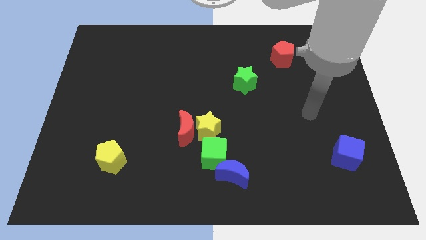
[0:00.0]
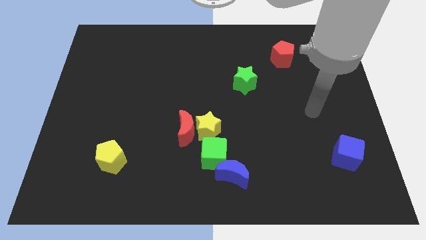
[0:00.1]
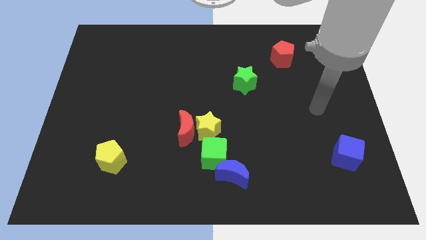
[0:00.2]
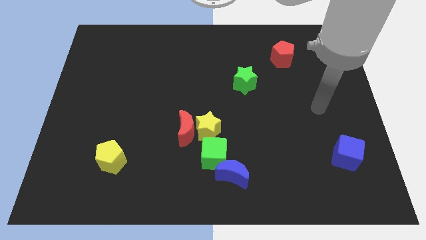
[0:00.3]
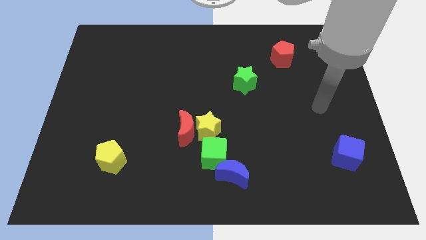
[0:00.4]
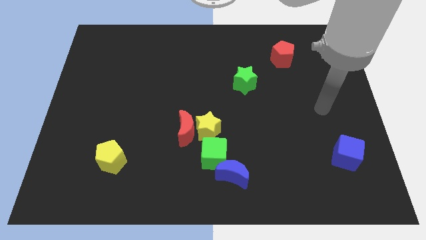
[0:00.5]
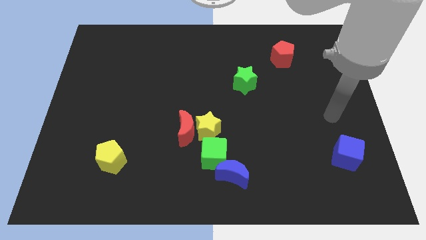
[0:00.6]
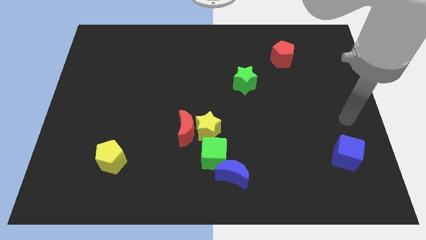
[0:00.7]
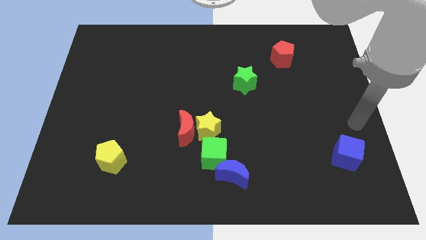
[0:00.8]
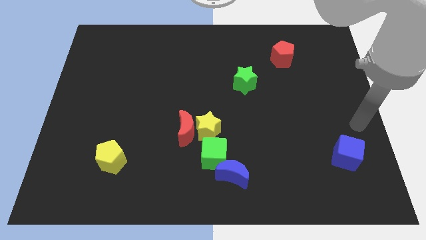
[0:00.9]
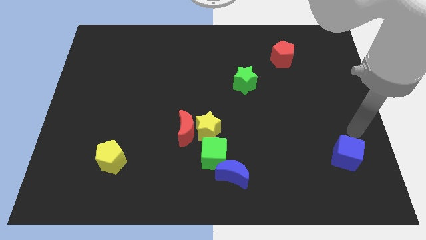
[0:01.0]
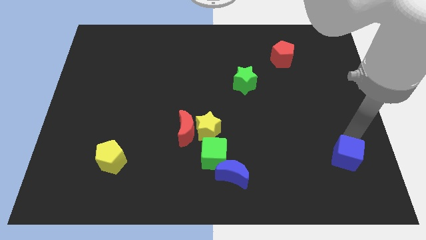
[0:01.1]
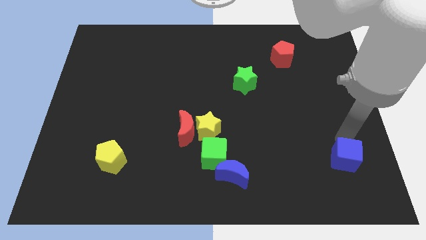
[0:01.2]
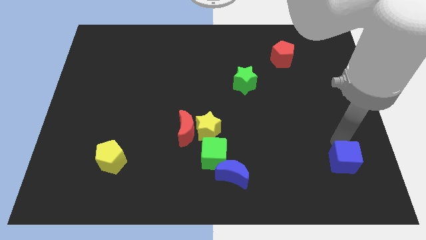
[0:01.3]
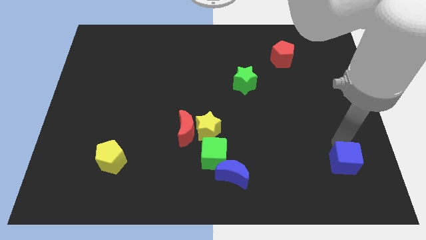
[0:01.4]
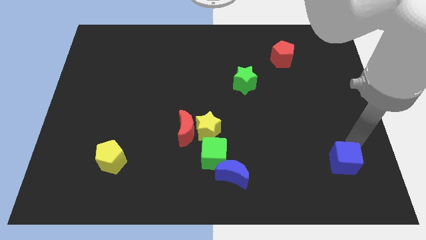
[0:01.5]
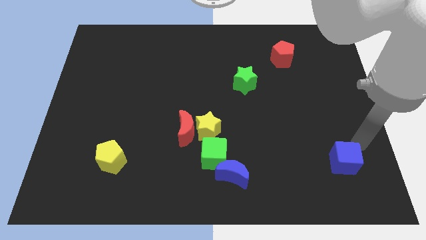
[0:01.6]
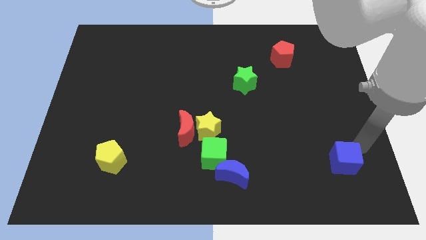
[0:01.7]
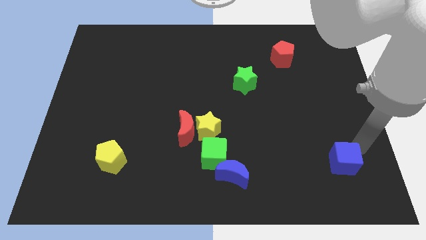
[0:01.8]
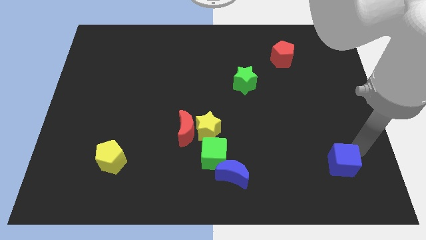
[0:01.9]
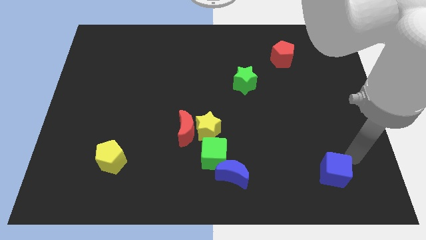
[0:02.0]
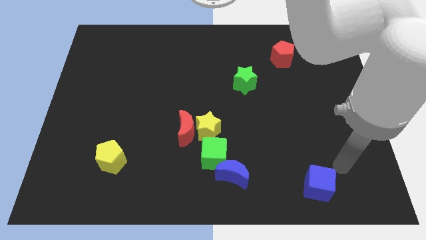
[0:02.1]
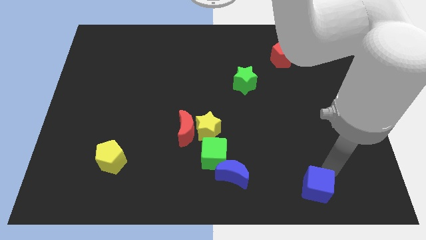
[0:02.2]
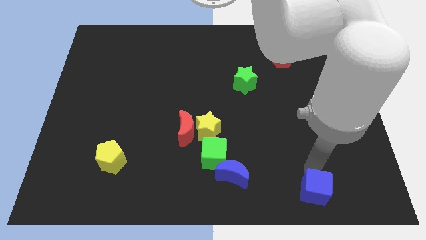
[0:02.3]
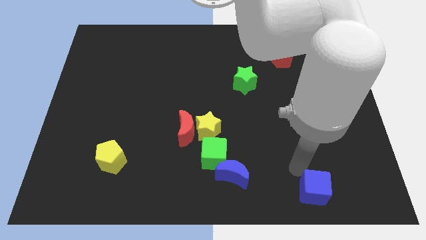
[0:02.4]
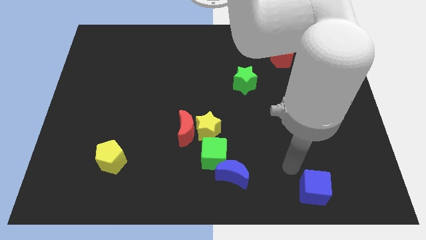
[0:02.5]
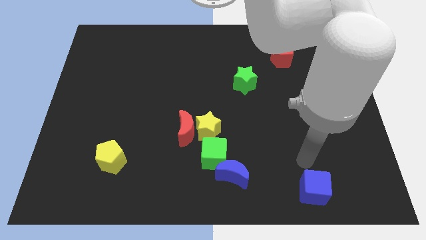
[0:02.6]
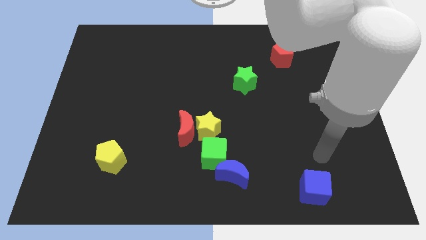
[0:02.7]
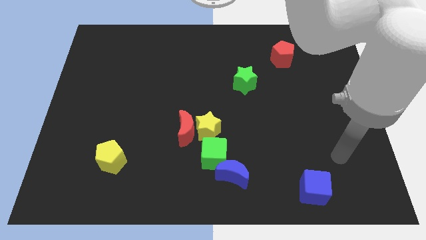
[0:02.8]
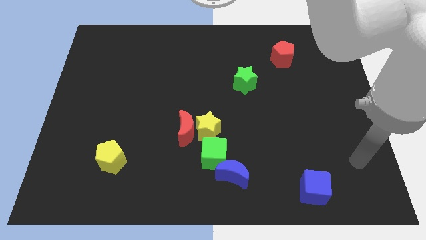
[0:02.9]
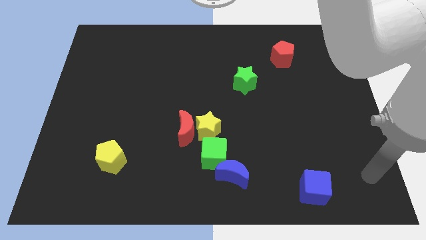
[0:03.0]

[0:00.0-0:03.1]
place the blue cube to the right side of the blue crescent

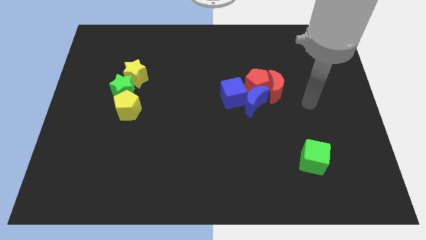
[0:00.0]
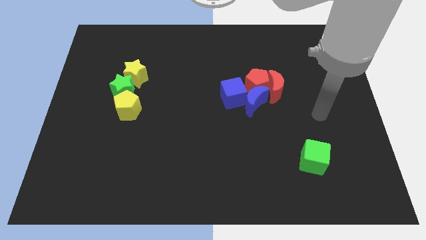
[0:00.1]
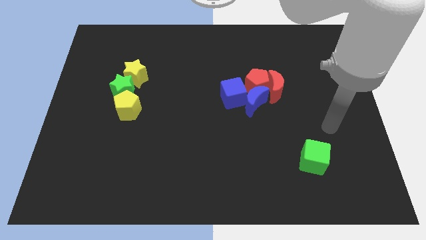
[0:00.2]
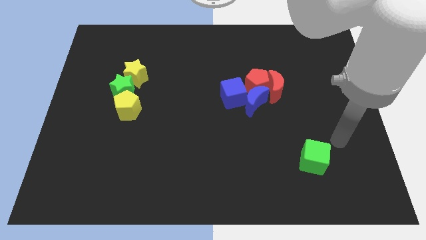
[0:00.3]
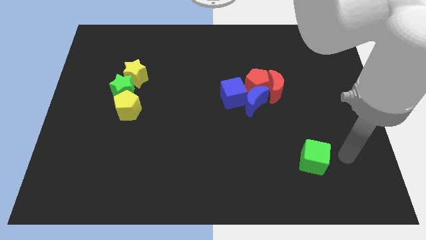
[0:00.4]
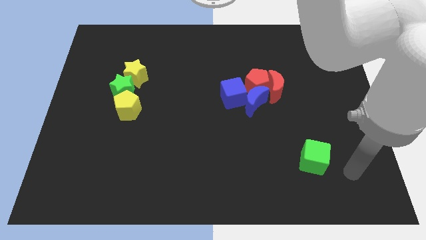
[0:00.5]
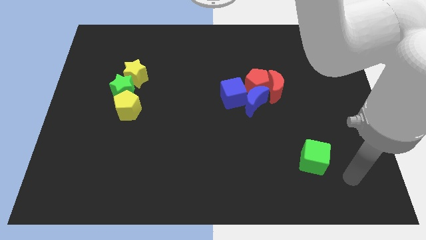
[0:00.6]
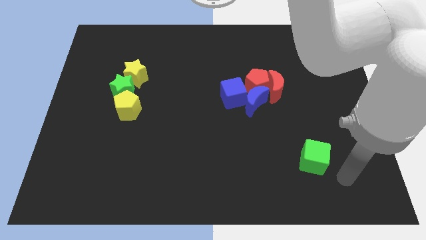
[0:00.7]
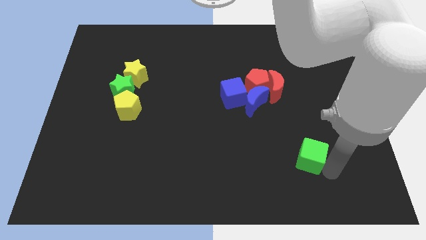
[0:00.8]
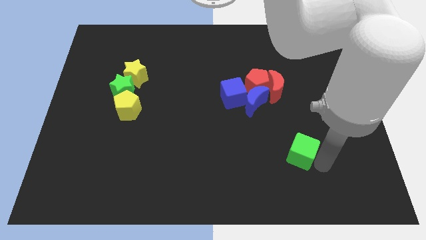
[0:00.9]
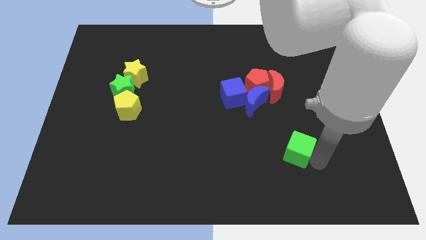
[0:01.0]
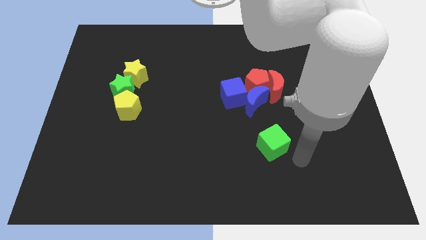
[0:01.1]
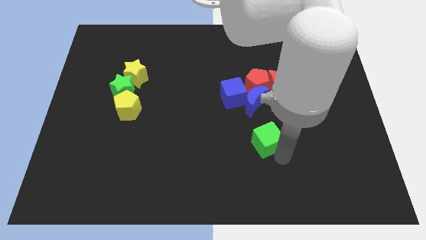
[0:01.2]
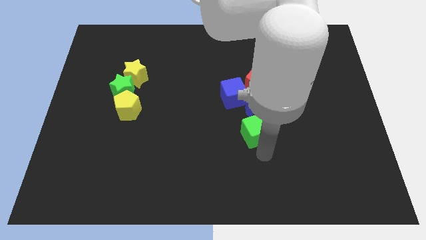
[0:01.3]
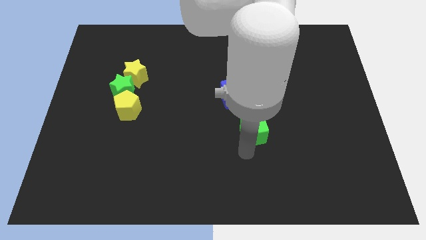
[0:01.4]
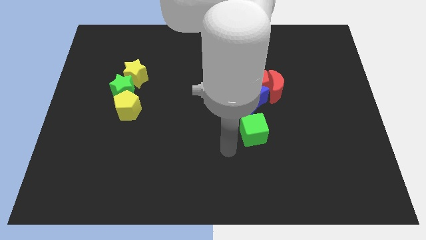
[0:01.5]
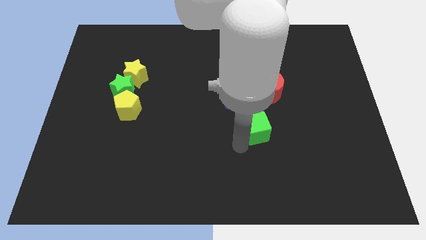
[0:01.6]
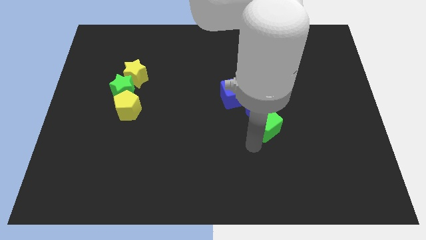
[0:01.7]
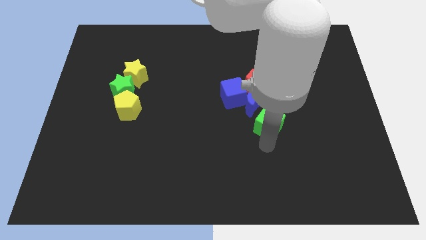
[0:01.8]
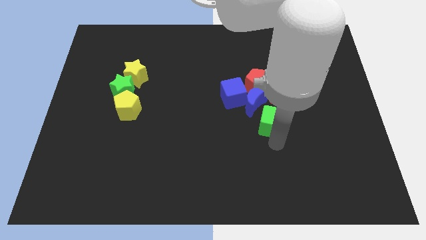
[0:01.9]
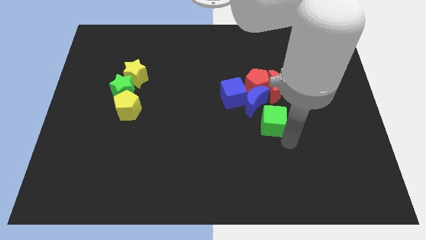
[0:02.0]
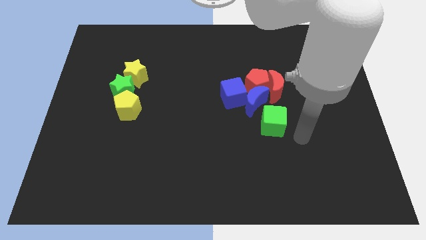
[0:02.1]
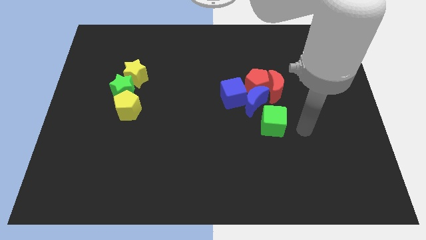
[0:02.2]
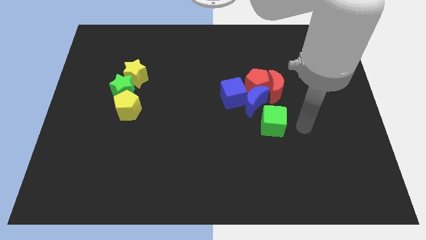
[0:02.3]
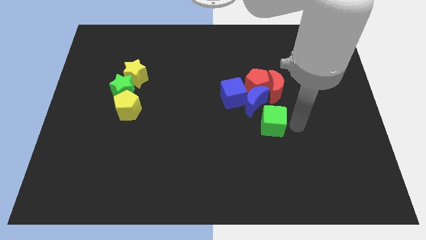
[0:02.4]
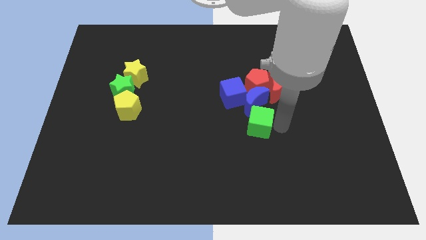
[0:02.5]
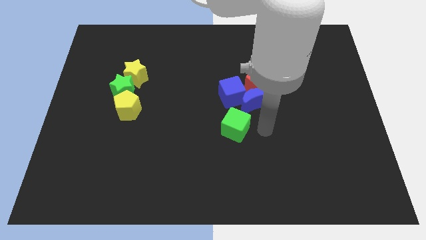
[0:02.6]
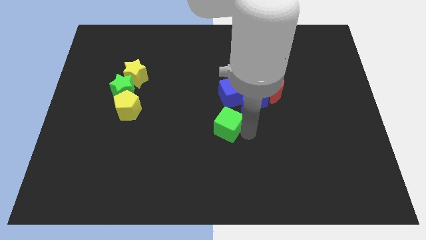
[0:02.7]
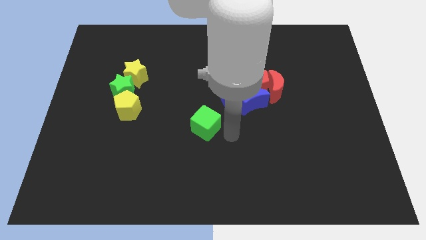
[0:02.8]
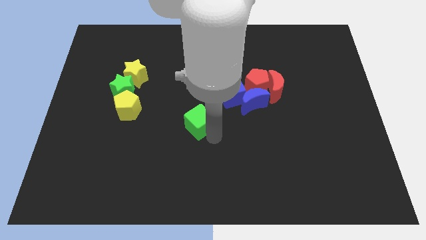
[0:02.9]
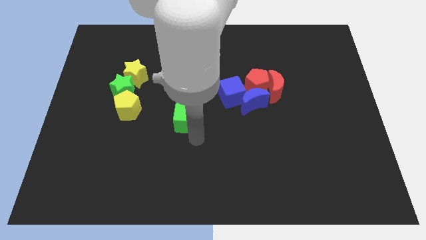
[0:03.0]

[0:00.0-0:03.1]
move the green cube towards the yellow pentagon

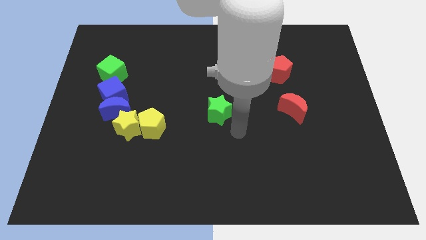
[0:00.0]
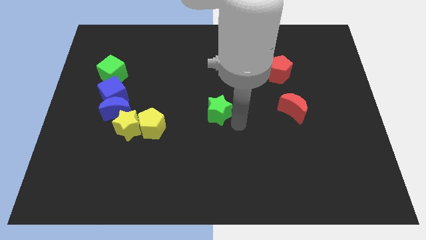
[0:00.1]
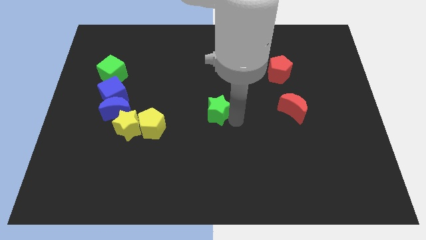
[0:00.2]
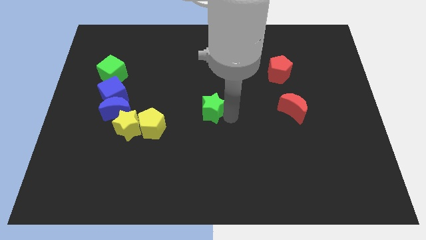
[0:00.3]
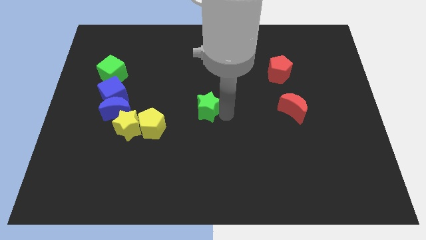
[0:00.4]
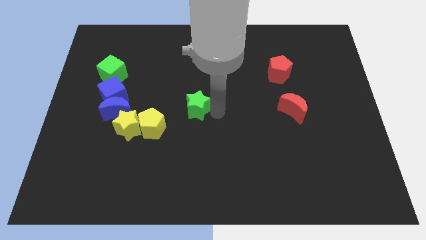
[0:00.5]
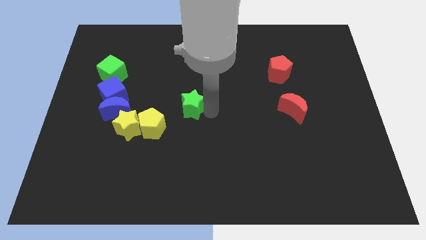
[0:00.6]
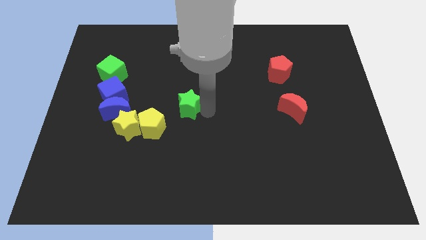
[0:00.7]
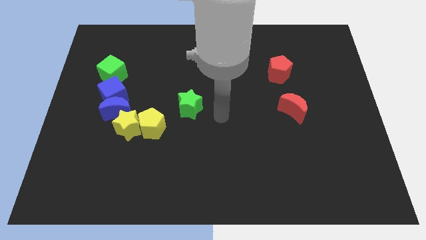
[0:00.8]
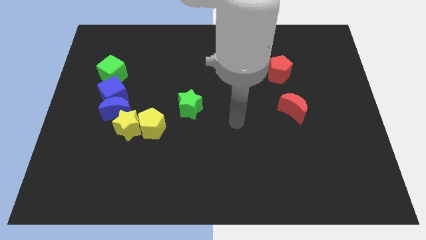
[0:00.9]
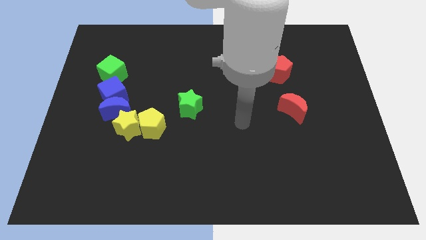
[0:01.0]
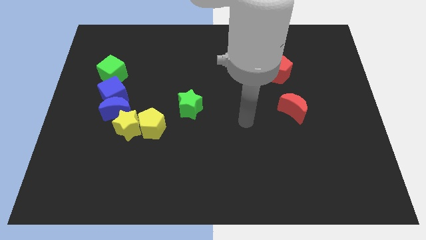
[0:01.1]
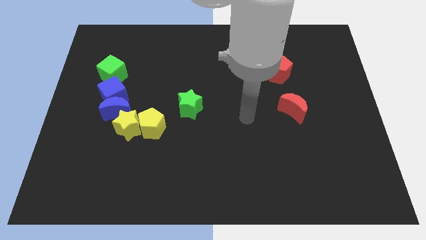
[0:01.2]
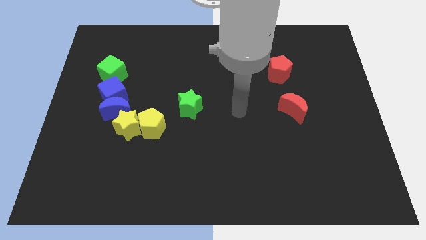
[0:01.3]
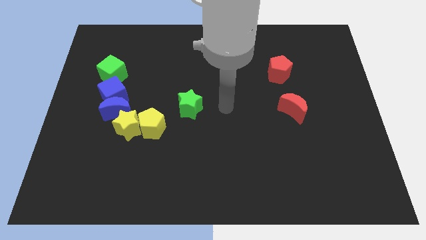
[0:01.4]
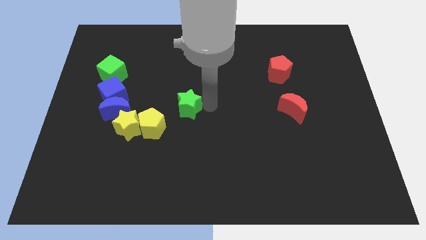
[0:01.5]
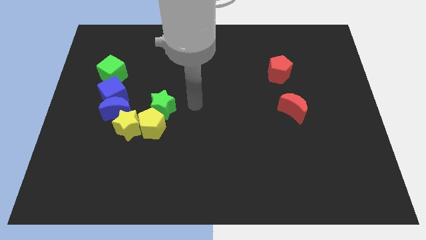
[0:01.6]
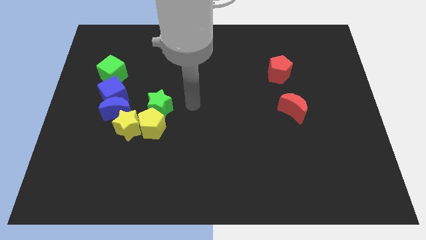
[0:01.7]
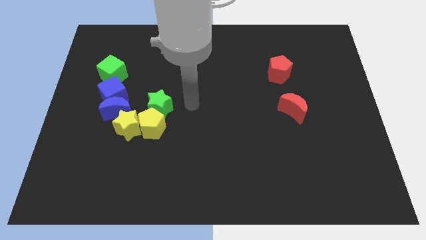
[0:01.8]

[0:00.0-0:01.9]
move the green star above the yellow penatgon

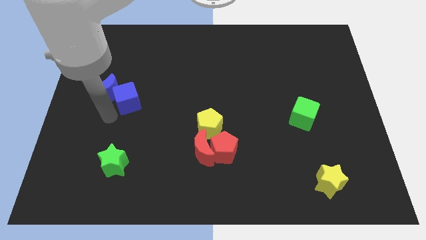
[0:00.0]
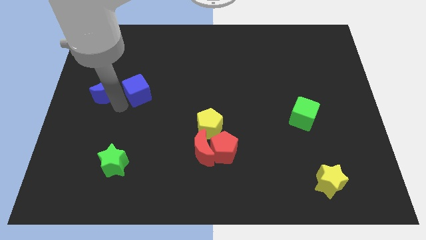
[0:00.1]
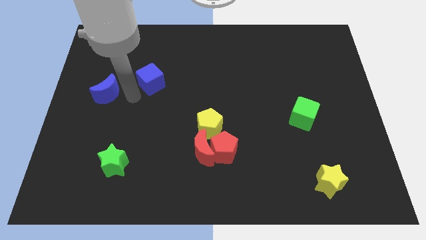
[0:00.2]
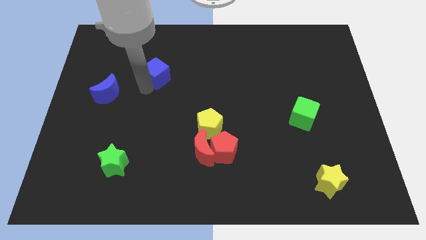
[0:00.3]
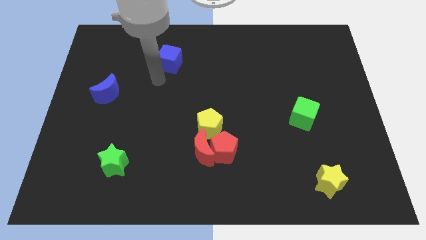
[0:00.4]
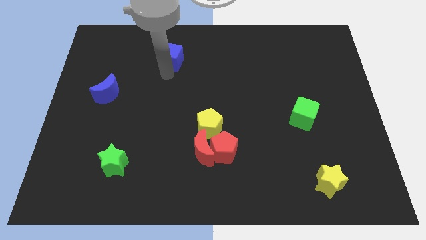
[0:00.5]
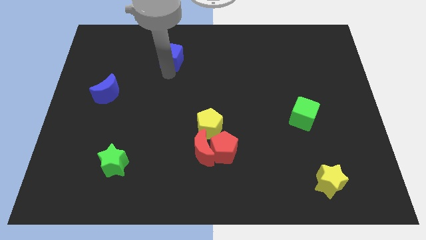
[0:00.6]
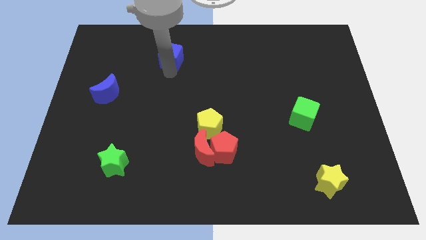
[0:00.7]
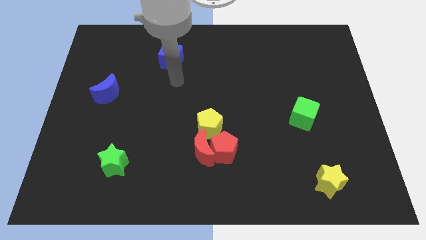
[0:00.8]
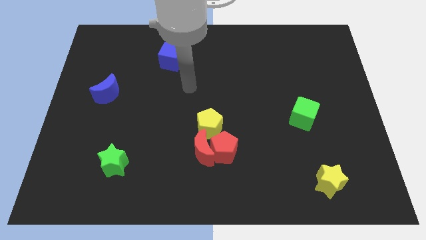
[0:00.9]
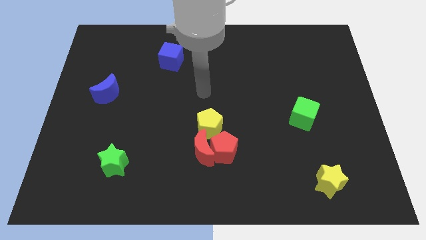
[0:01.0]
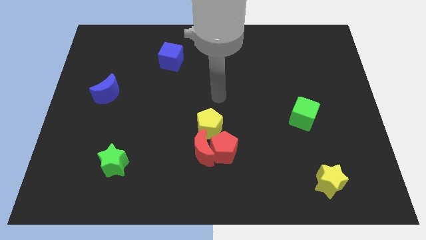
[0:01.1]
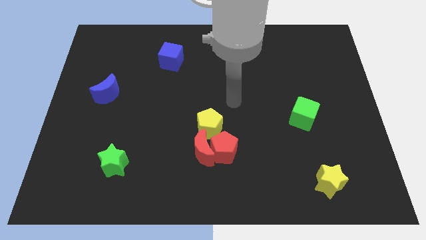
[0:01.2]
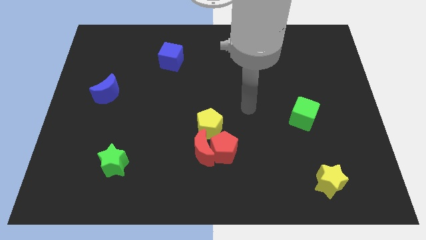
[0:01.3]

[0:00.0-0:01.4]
push the blue cube towards the top center of the board
